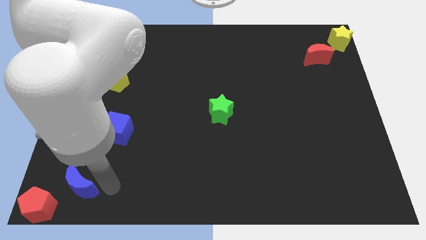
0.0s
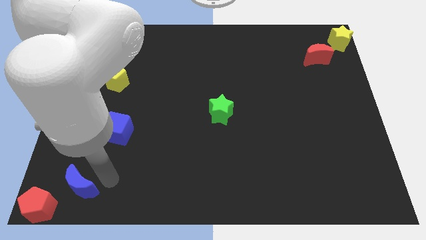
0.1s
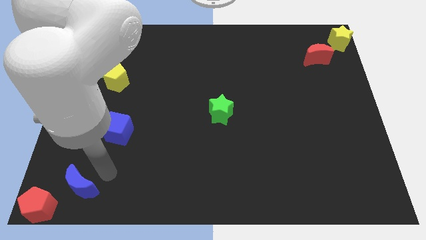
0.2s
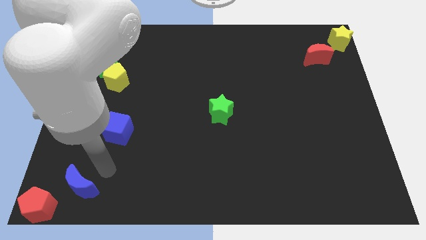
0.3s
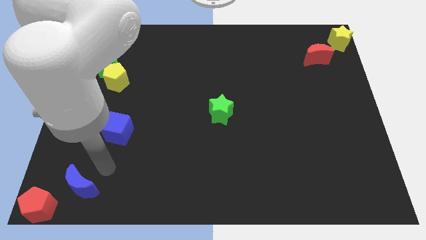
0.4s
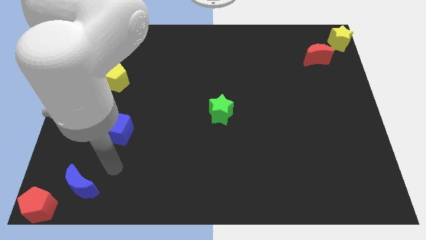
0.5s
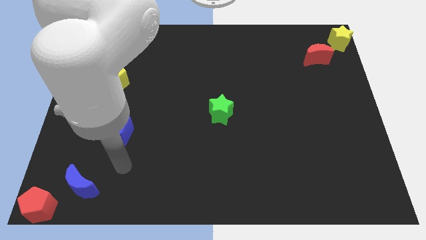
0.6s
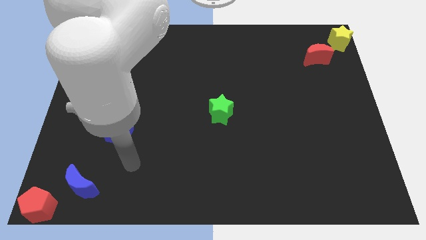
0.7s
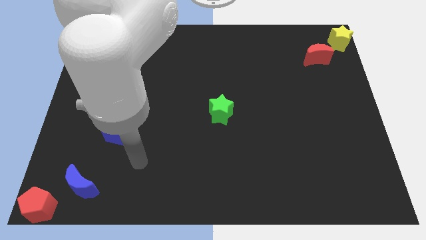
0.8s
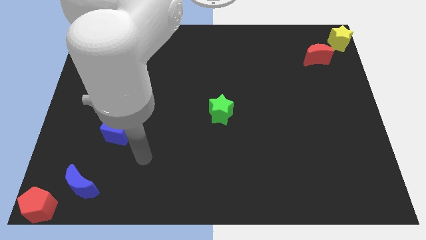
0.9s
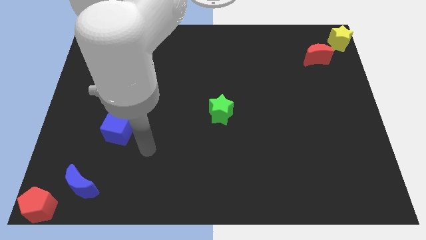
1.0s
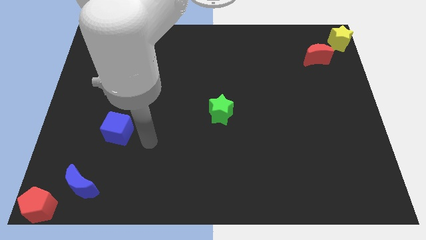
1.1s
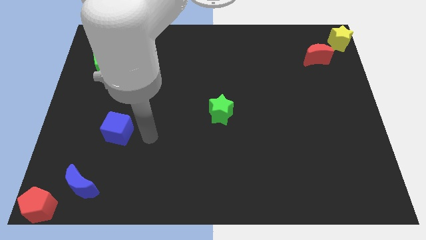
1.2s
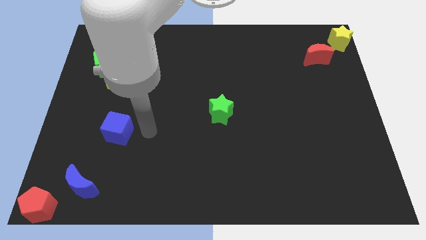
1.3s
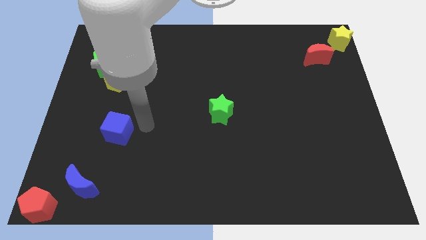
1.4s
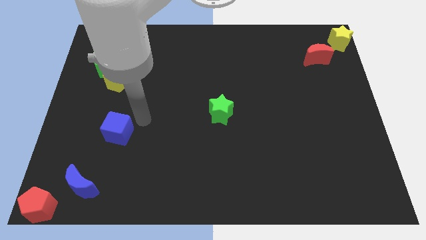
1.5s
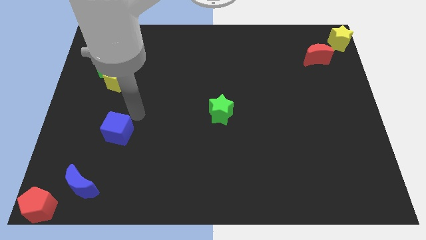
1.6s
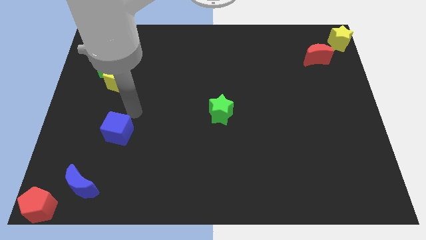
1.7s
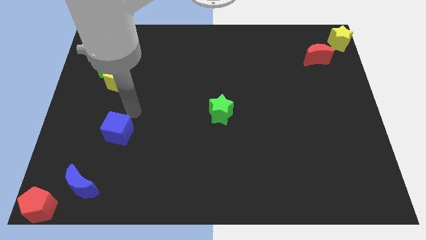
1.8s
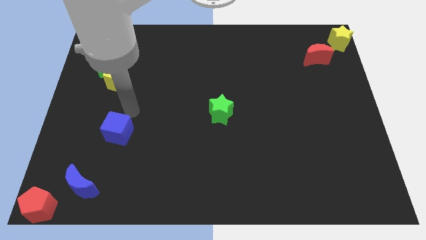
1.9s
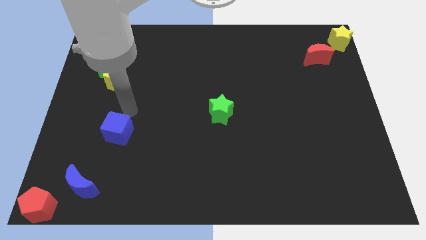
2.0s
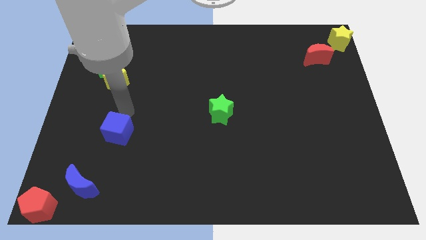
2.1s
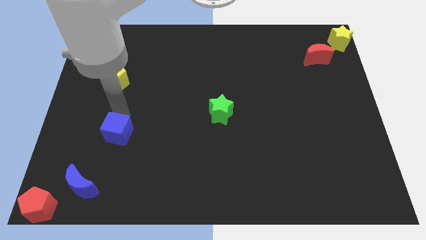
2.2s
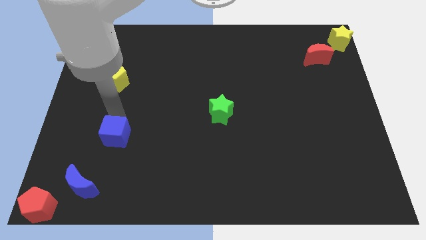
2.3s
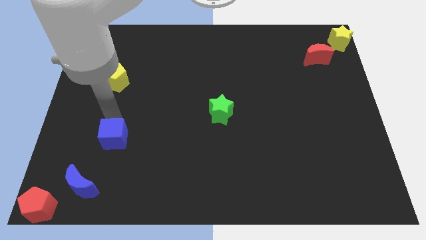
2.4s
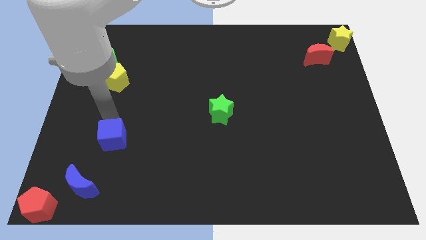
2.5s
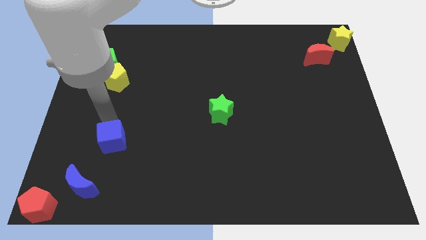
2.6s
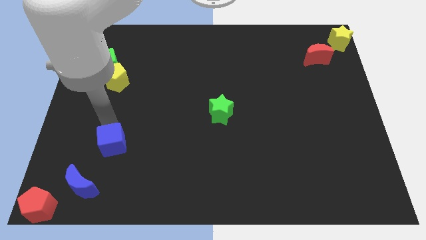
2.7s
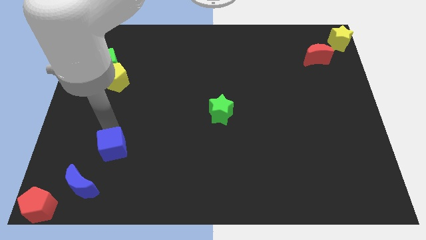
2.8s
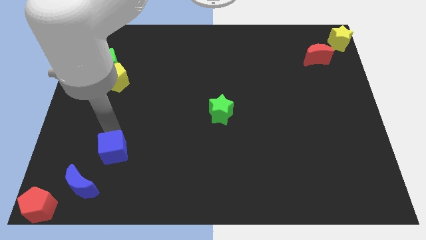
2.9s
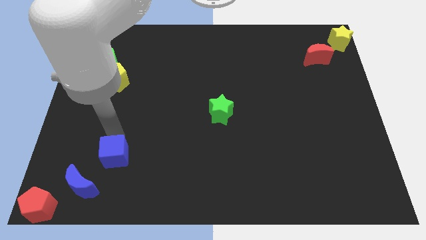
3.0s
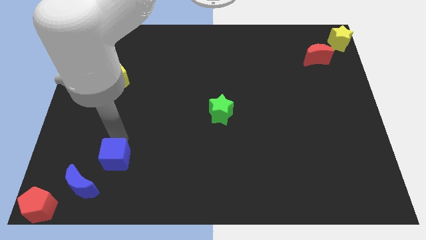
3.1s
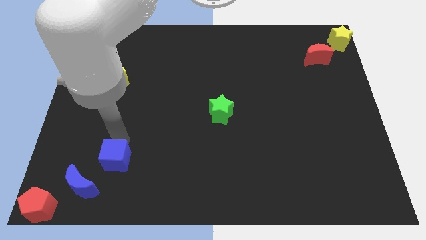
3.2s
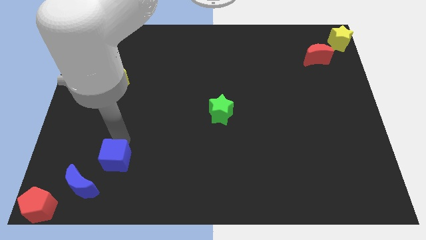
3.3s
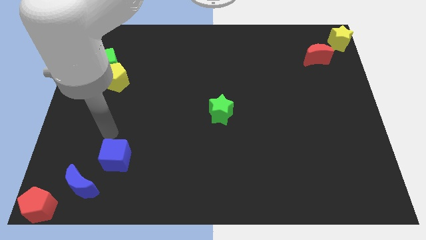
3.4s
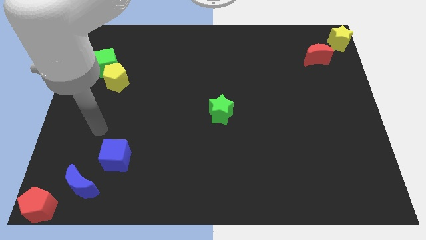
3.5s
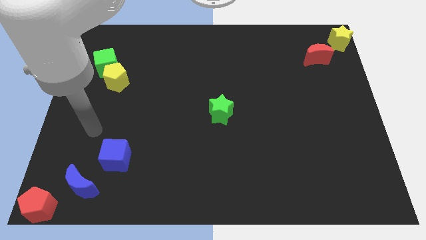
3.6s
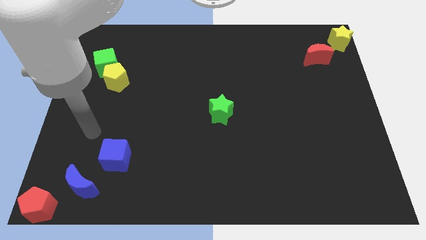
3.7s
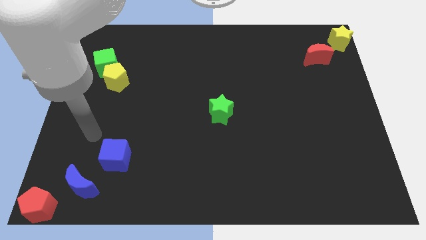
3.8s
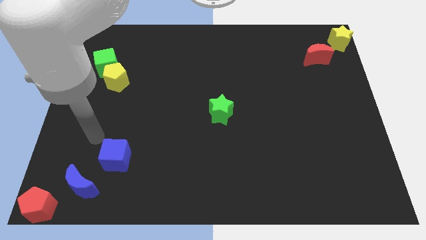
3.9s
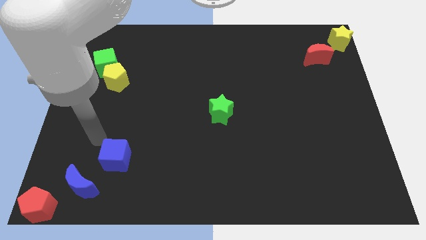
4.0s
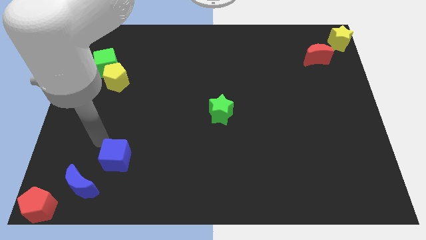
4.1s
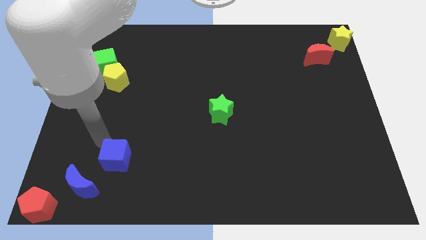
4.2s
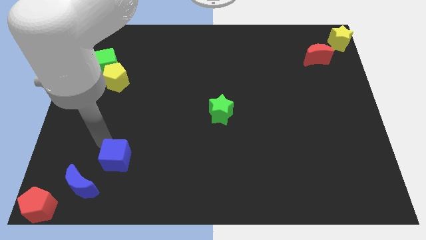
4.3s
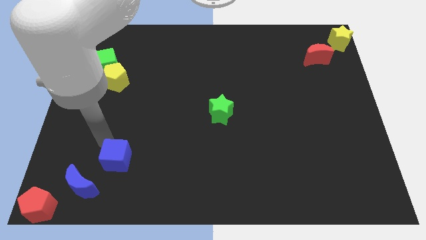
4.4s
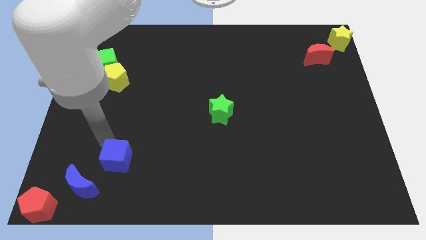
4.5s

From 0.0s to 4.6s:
move blue cube diagonally above blue moon

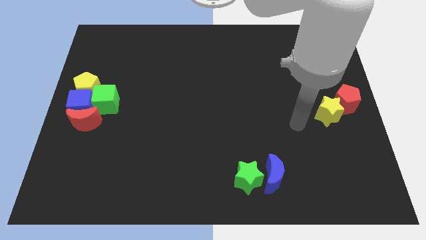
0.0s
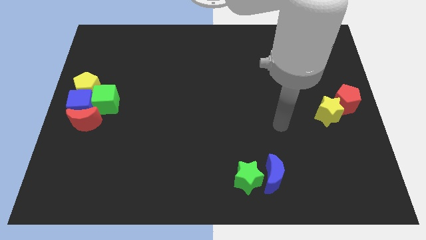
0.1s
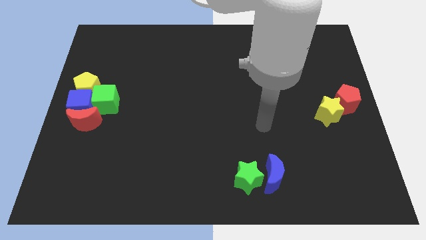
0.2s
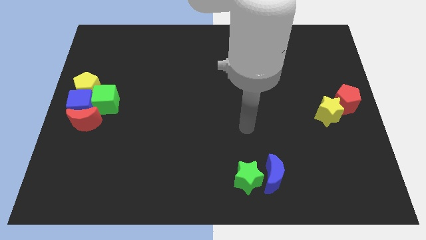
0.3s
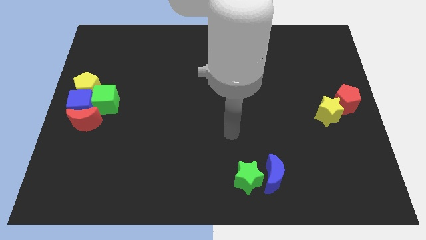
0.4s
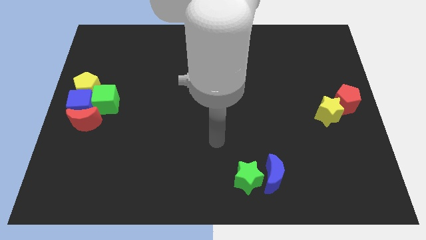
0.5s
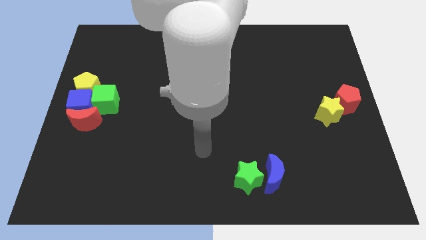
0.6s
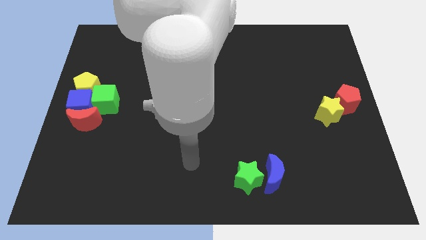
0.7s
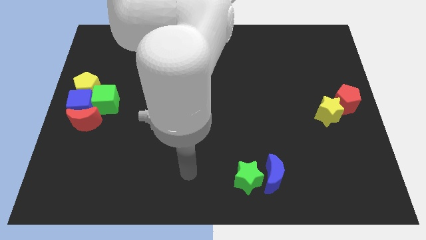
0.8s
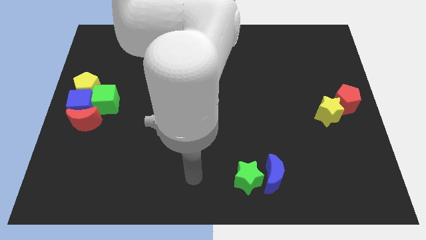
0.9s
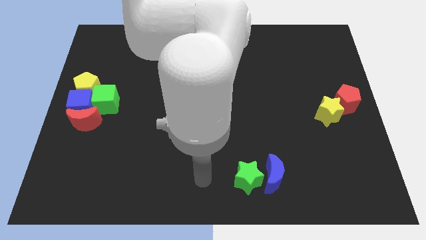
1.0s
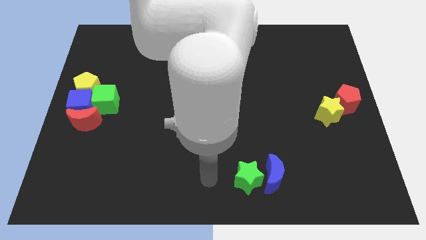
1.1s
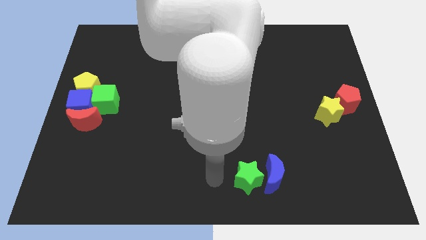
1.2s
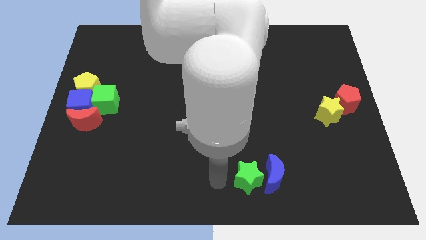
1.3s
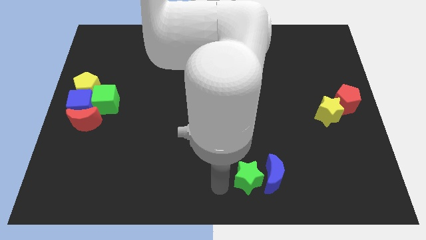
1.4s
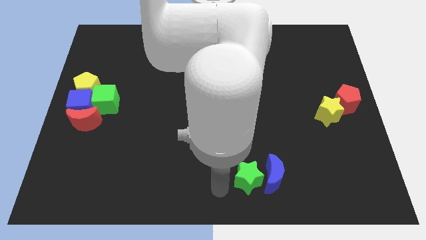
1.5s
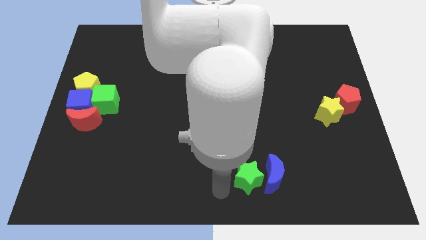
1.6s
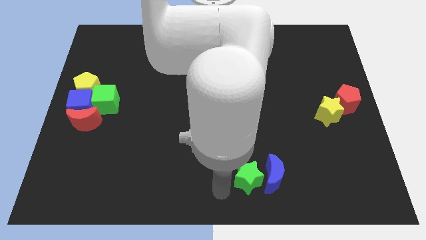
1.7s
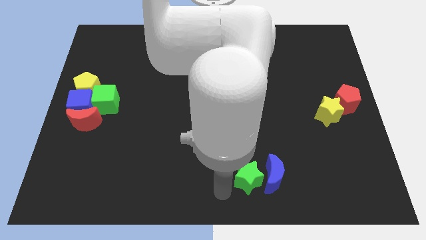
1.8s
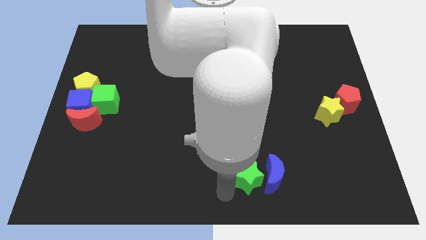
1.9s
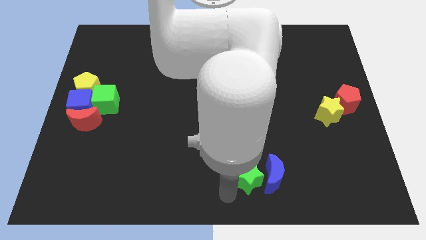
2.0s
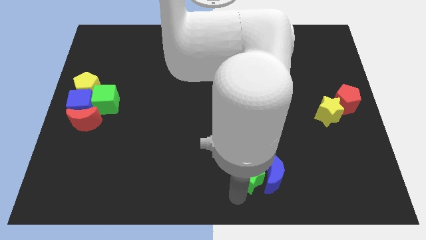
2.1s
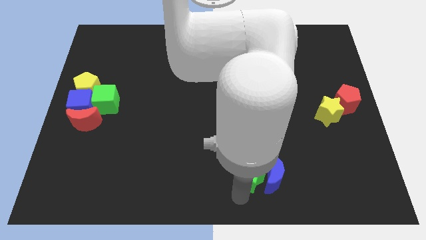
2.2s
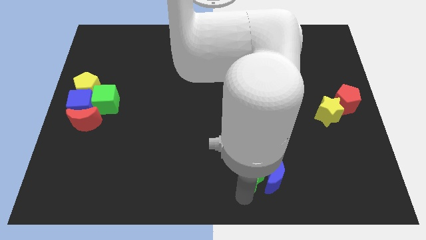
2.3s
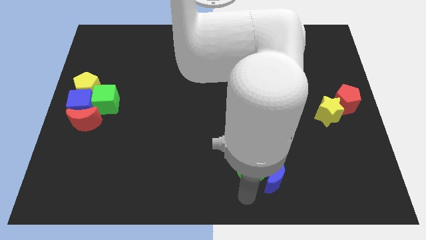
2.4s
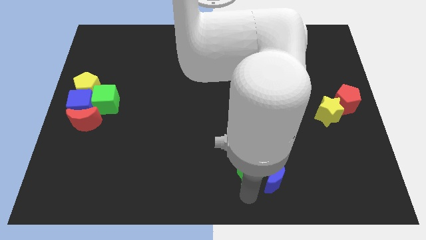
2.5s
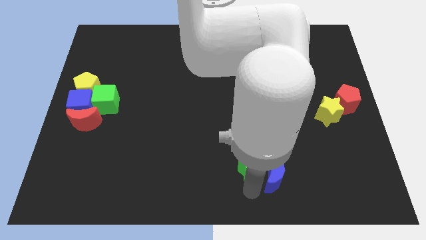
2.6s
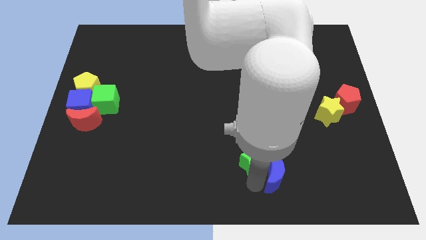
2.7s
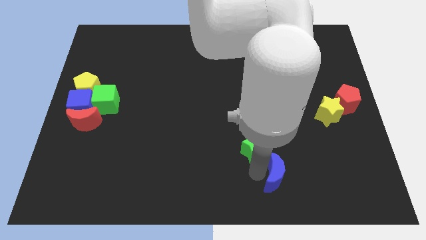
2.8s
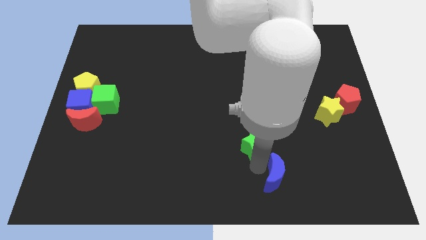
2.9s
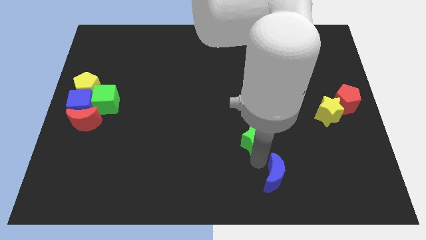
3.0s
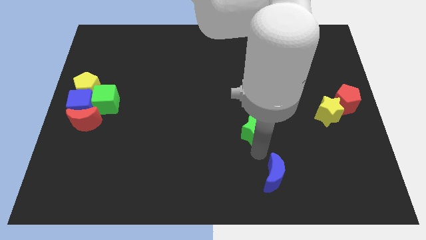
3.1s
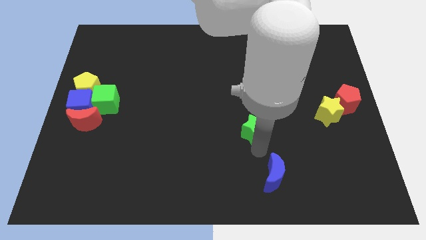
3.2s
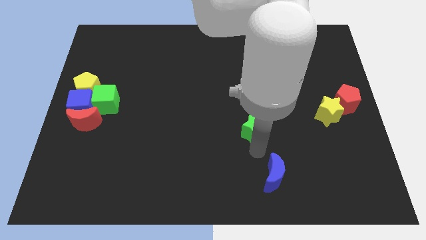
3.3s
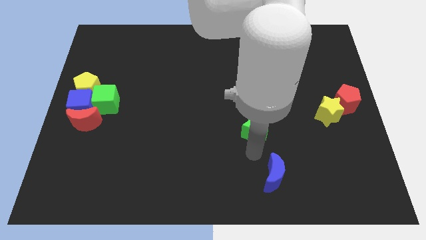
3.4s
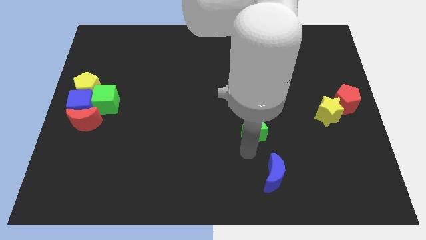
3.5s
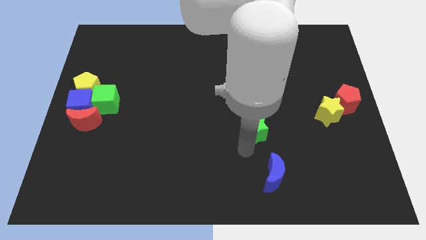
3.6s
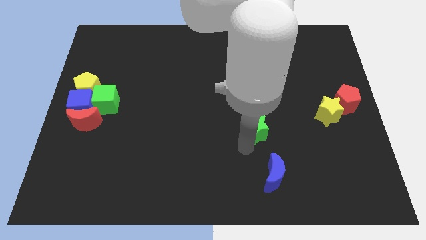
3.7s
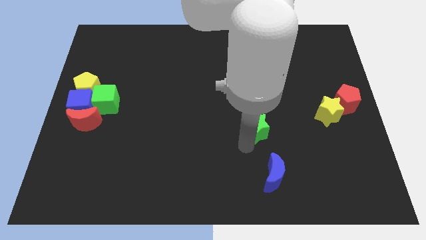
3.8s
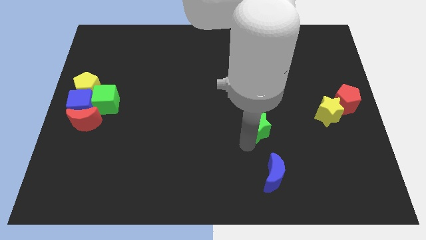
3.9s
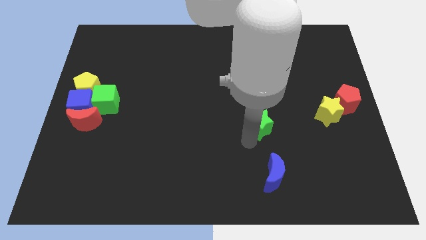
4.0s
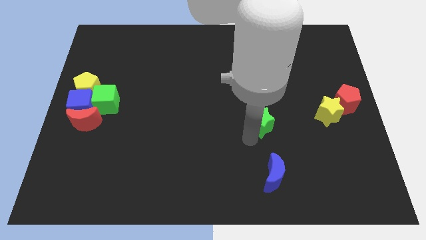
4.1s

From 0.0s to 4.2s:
separate the green star from the blue moon

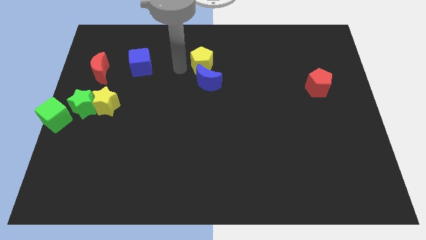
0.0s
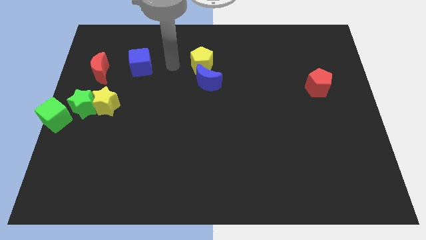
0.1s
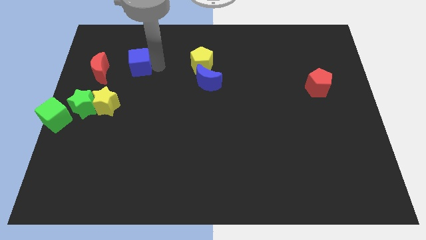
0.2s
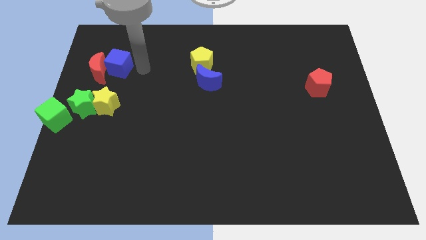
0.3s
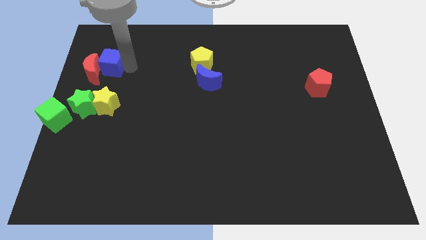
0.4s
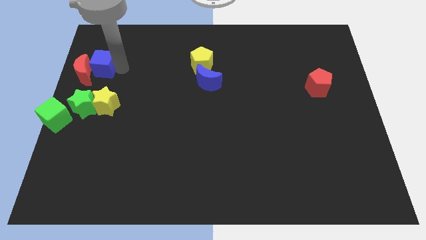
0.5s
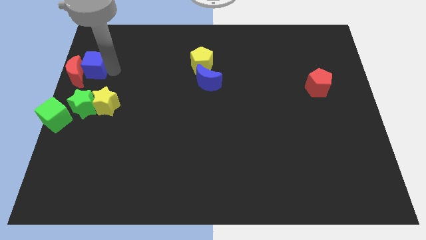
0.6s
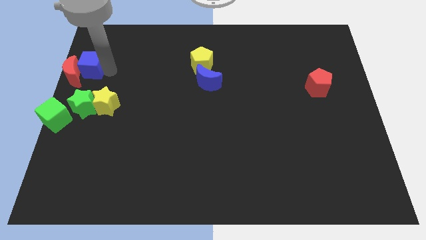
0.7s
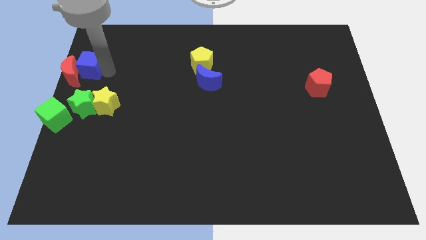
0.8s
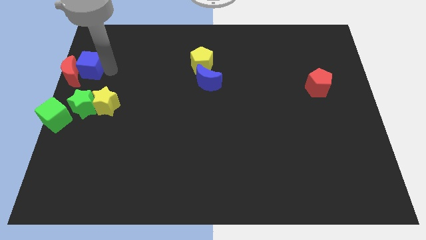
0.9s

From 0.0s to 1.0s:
push the blue cube into the red moon
